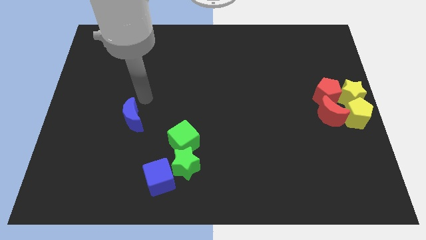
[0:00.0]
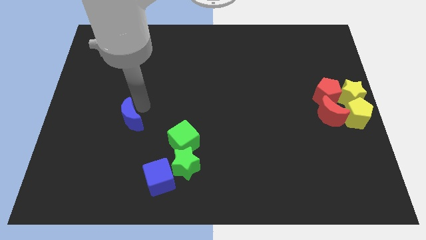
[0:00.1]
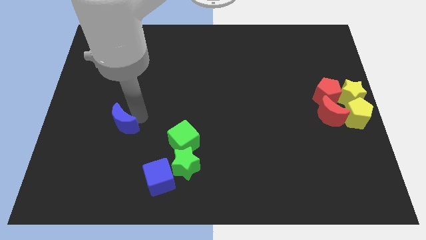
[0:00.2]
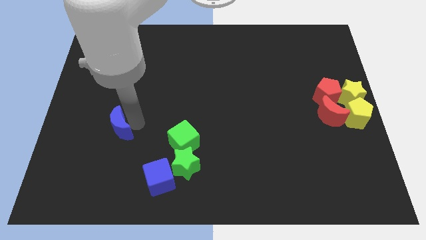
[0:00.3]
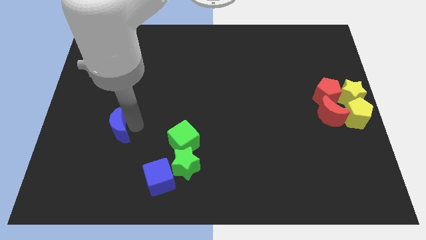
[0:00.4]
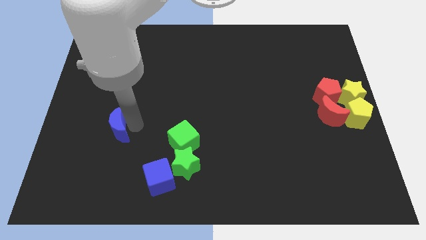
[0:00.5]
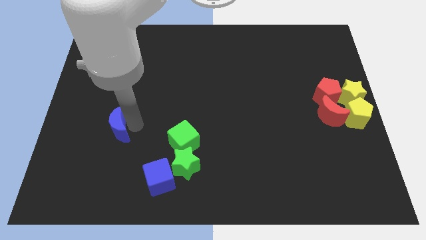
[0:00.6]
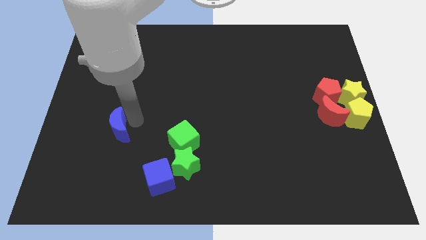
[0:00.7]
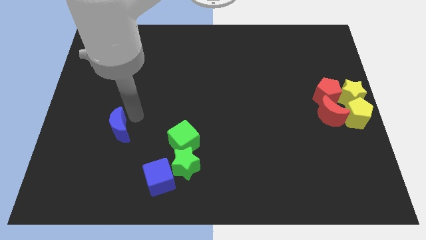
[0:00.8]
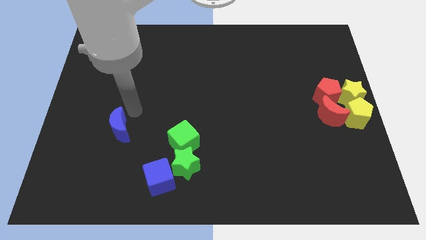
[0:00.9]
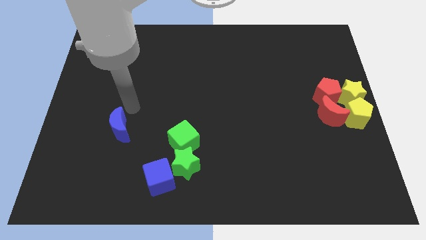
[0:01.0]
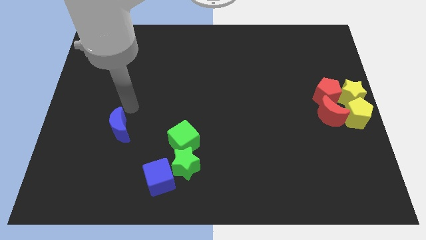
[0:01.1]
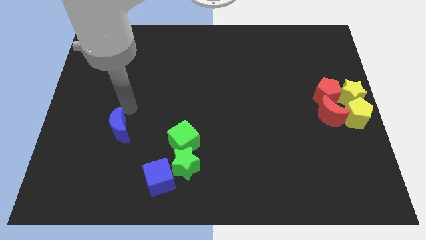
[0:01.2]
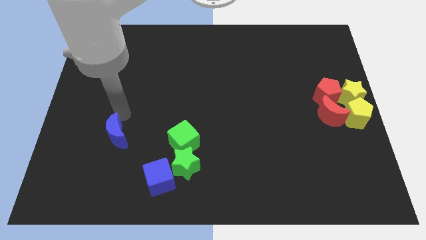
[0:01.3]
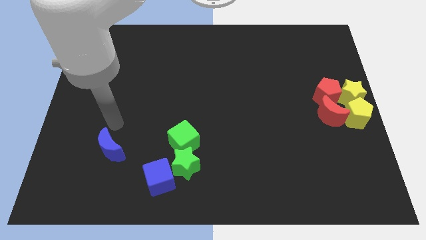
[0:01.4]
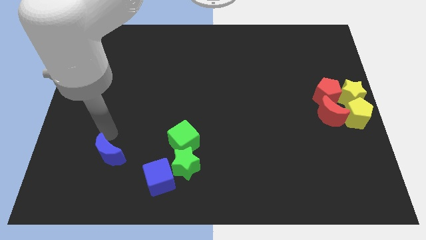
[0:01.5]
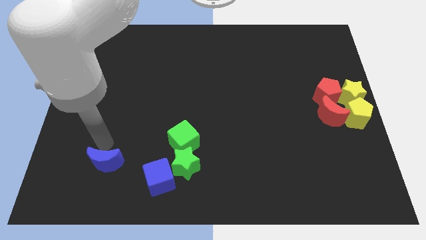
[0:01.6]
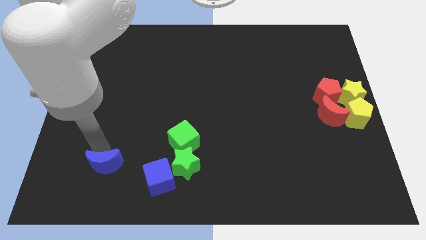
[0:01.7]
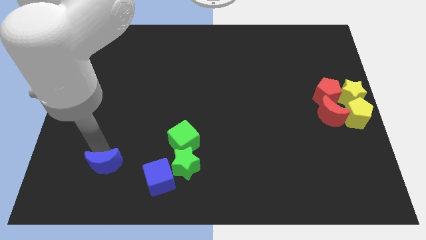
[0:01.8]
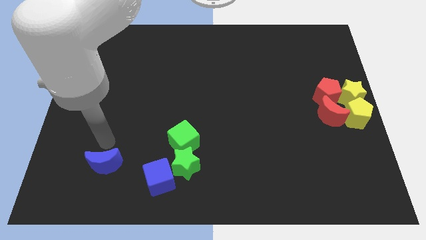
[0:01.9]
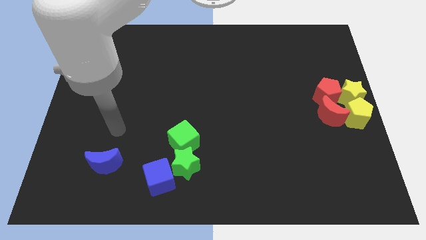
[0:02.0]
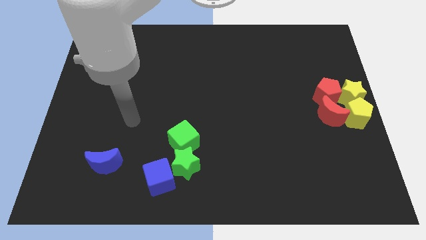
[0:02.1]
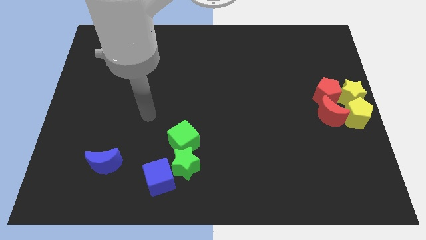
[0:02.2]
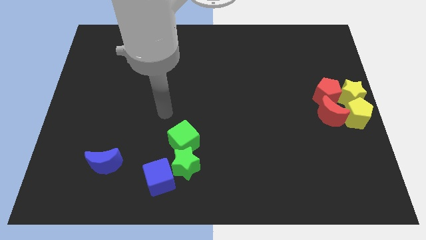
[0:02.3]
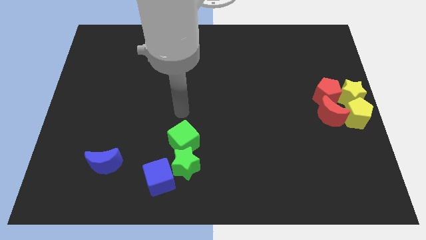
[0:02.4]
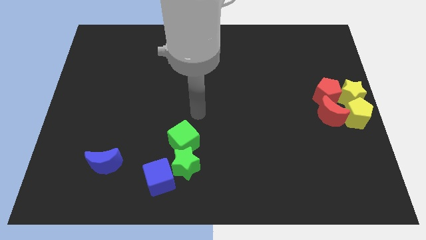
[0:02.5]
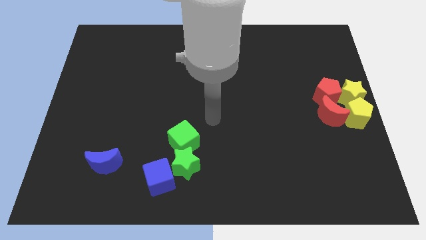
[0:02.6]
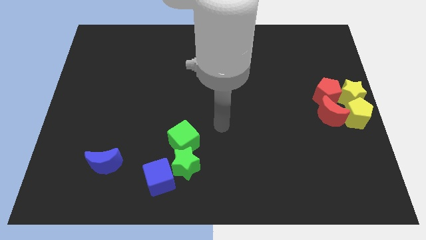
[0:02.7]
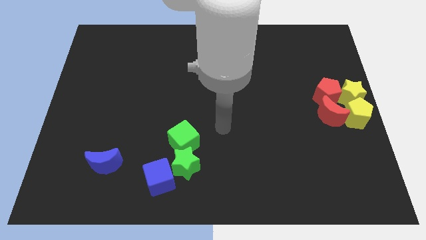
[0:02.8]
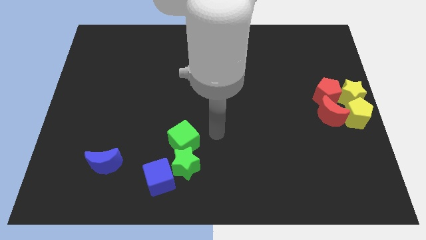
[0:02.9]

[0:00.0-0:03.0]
place the blue moon horizontally left to the green star

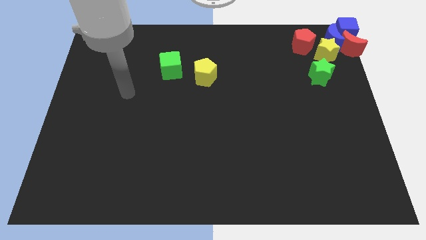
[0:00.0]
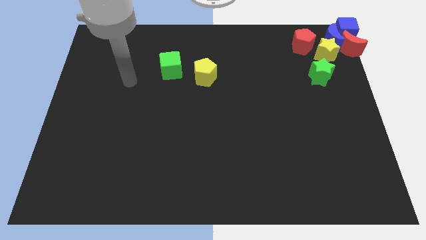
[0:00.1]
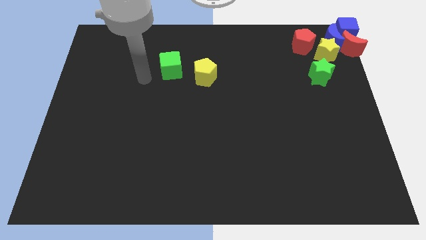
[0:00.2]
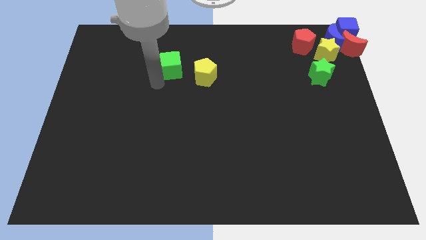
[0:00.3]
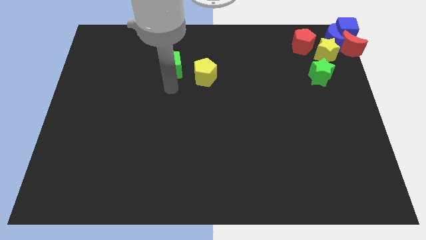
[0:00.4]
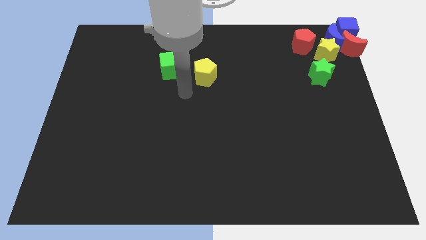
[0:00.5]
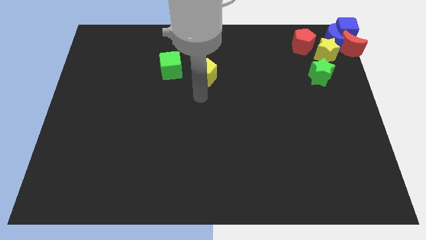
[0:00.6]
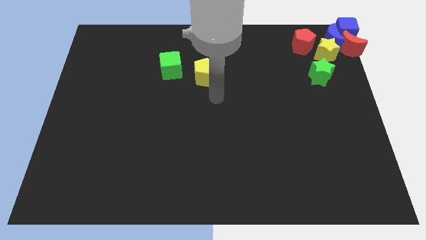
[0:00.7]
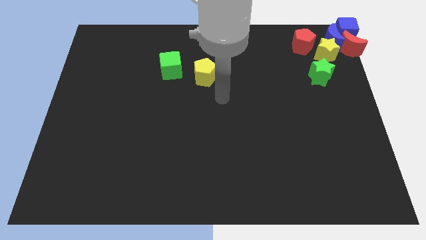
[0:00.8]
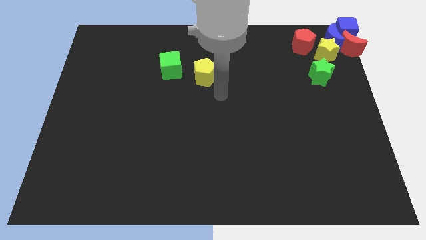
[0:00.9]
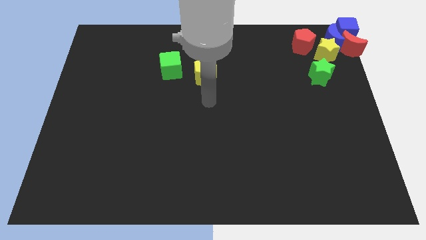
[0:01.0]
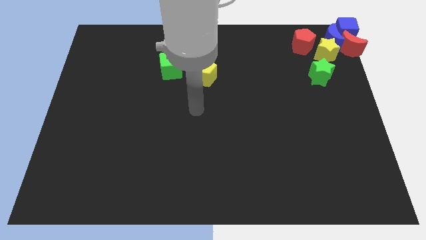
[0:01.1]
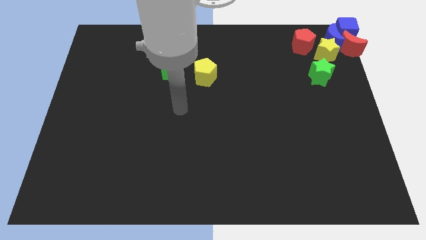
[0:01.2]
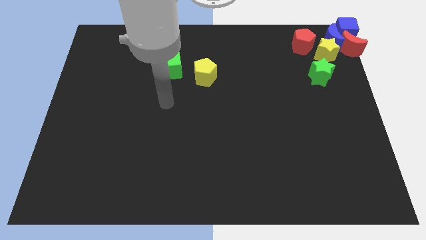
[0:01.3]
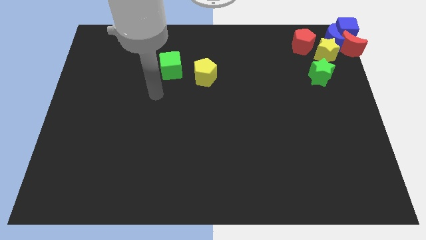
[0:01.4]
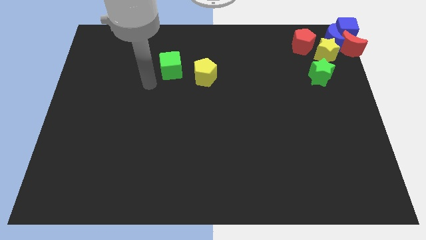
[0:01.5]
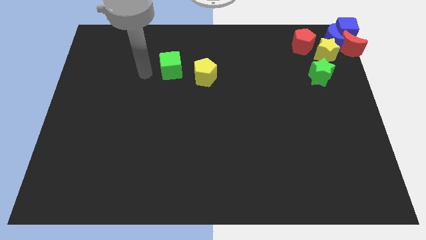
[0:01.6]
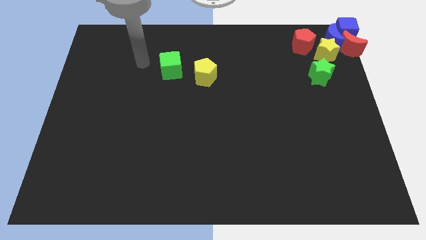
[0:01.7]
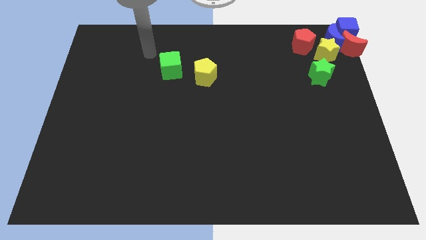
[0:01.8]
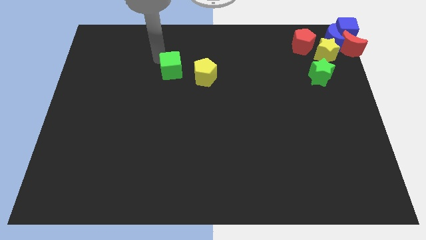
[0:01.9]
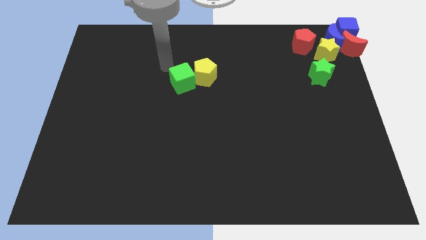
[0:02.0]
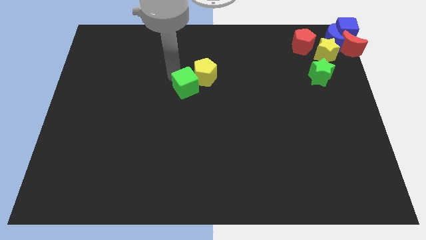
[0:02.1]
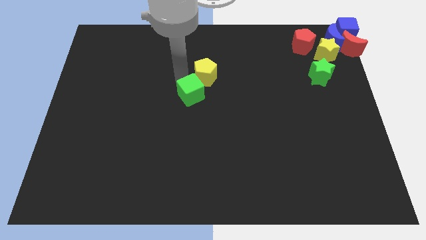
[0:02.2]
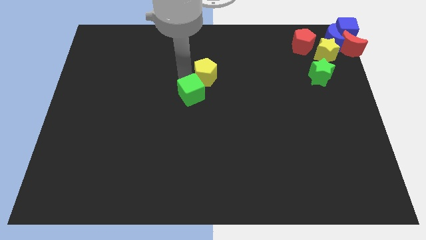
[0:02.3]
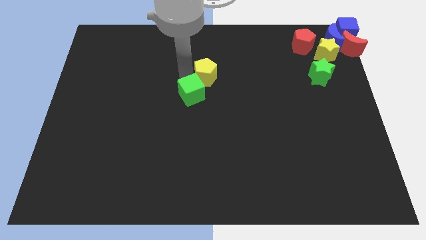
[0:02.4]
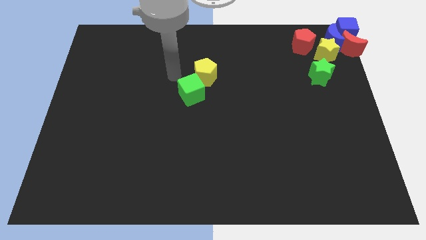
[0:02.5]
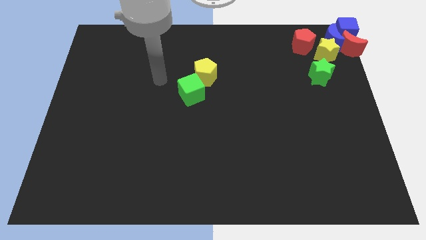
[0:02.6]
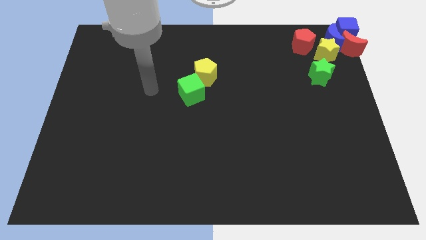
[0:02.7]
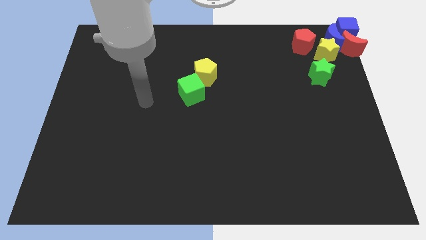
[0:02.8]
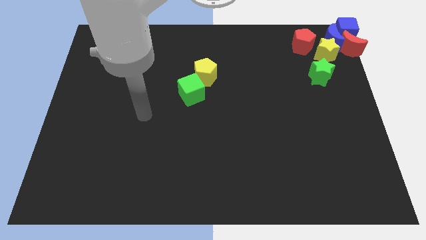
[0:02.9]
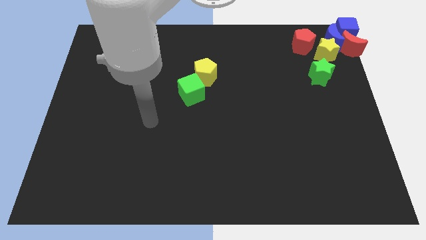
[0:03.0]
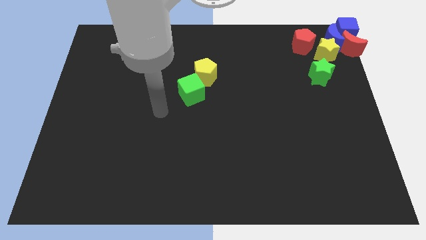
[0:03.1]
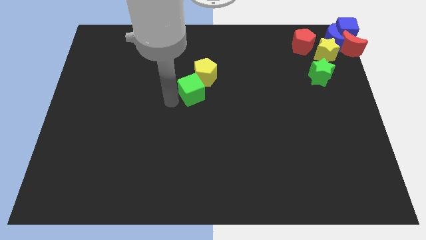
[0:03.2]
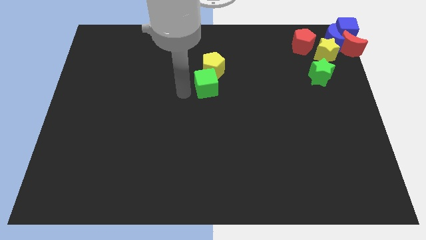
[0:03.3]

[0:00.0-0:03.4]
place the green cube at the bottom of the yellow pentagon

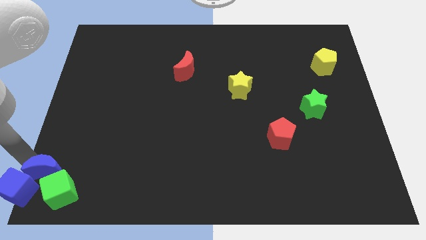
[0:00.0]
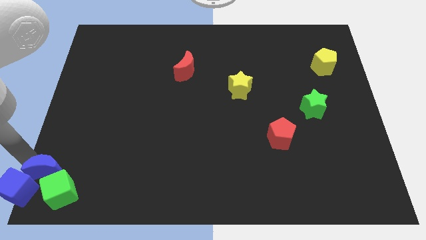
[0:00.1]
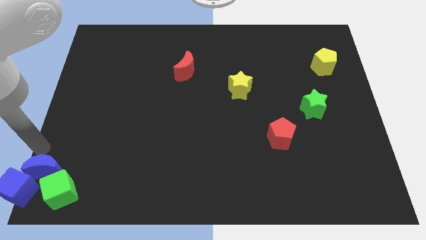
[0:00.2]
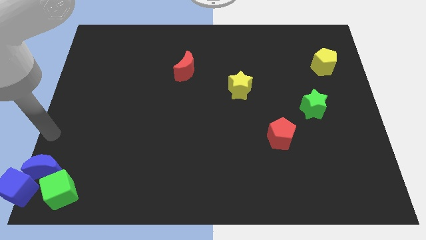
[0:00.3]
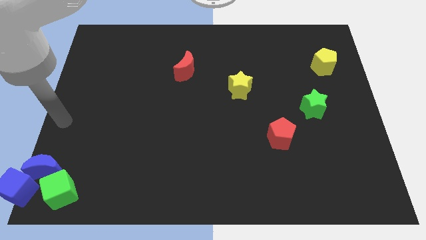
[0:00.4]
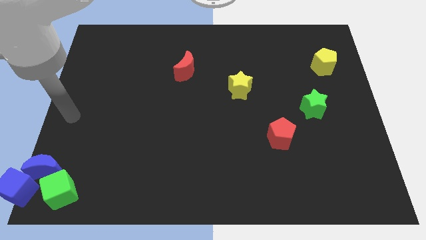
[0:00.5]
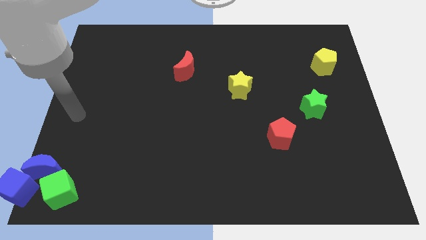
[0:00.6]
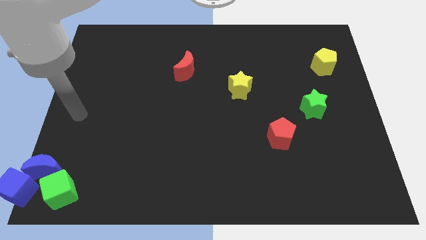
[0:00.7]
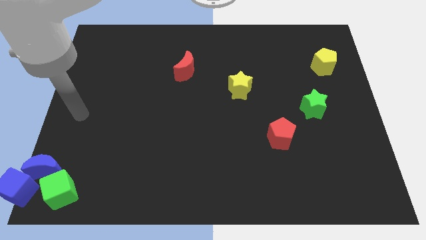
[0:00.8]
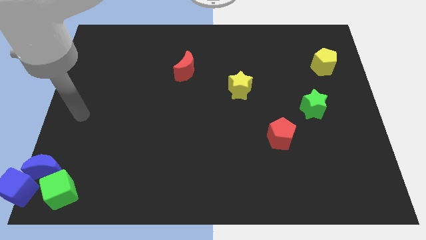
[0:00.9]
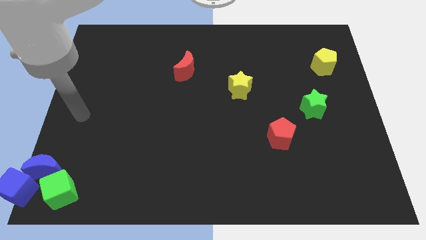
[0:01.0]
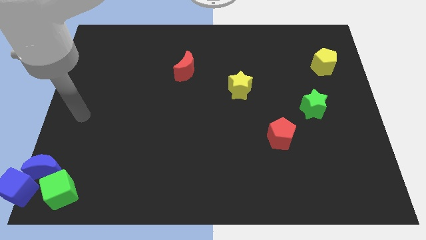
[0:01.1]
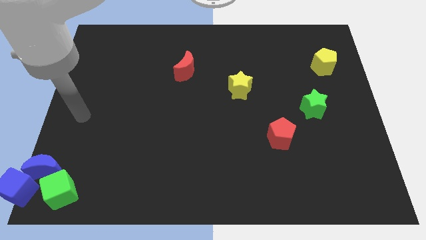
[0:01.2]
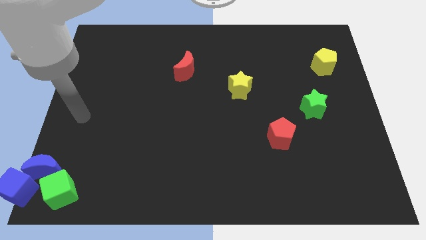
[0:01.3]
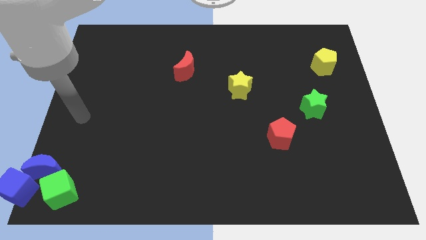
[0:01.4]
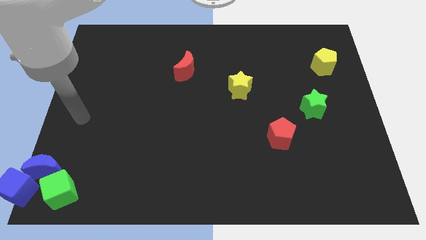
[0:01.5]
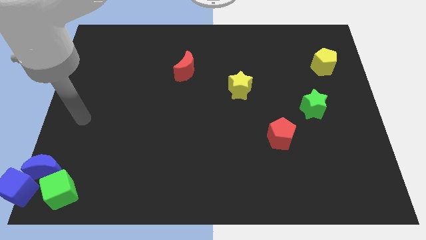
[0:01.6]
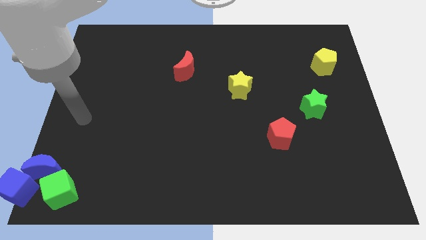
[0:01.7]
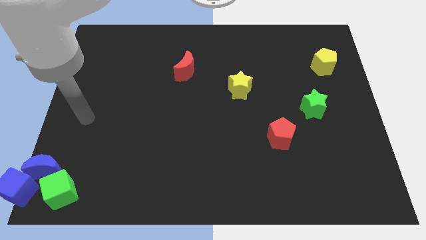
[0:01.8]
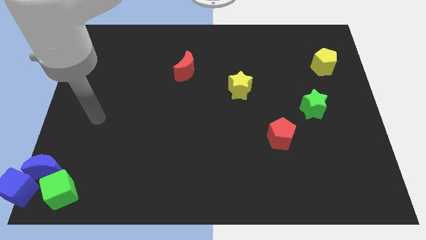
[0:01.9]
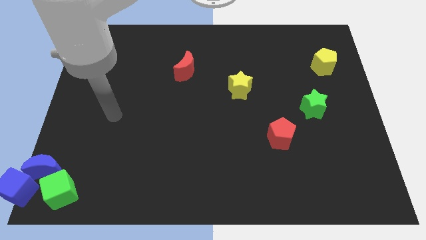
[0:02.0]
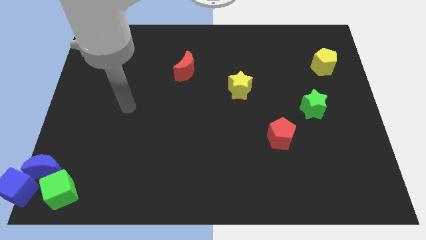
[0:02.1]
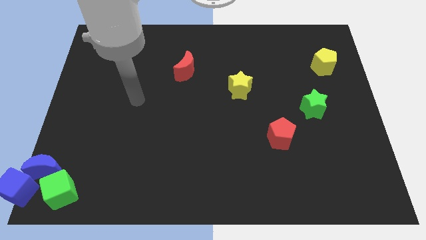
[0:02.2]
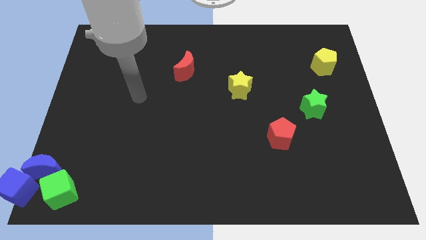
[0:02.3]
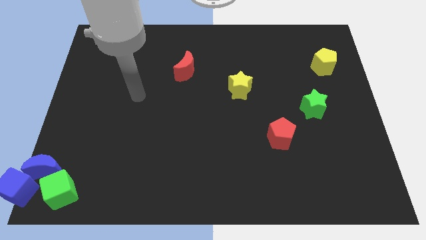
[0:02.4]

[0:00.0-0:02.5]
move your arm and point diagonal below the red moon
